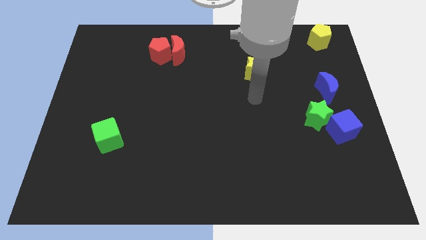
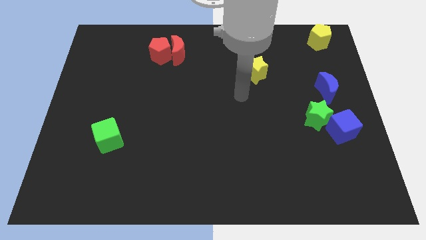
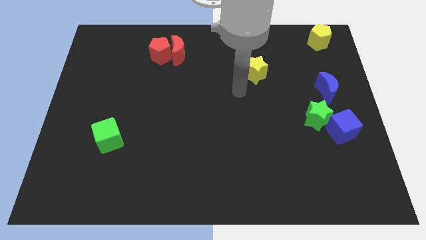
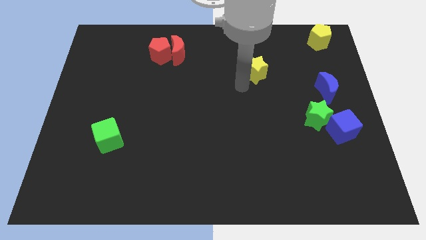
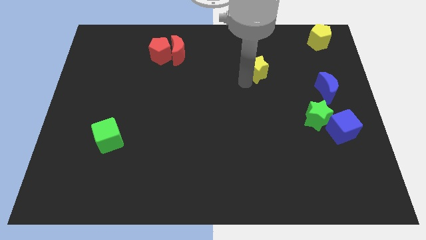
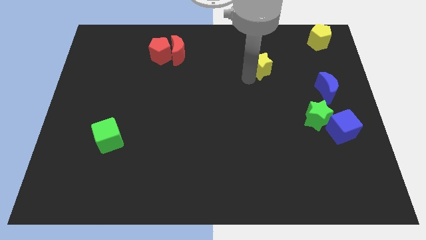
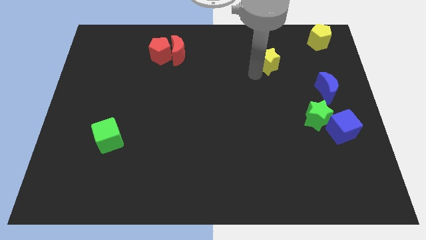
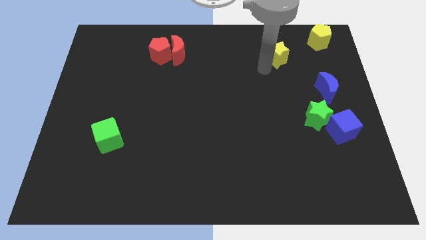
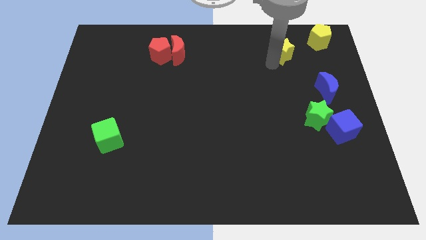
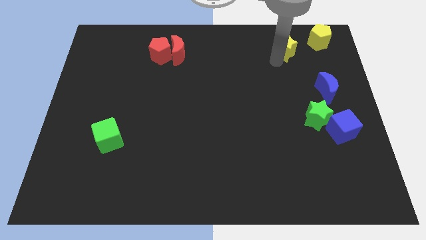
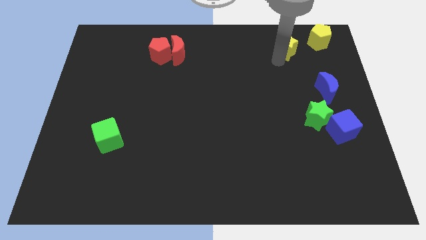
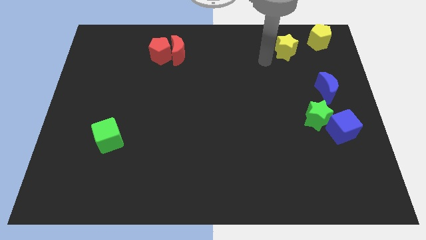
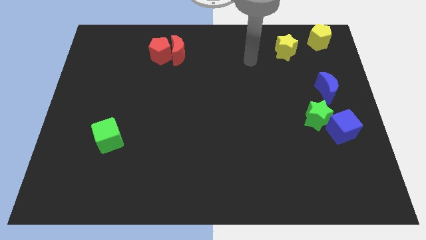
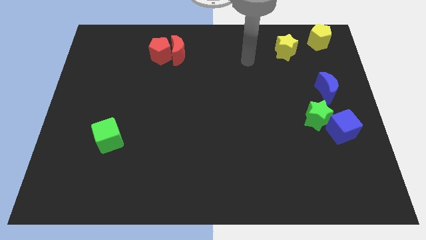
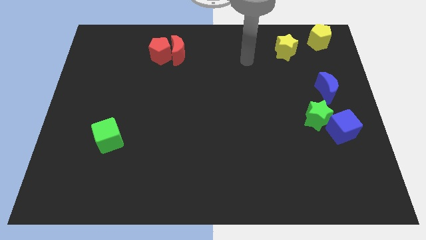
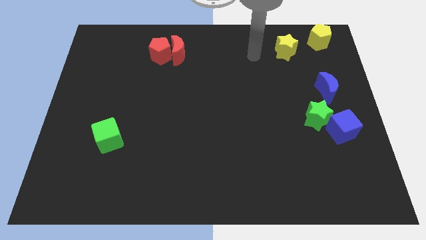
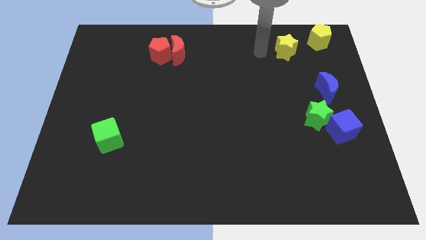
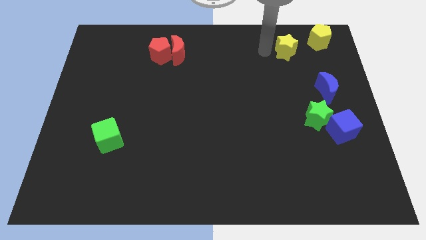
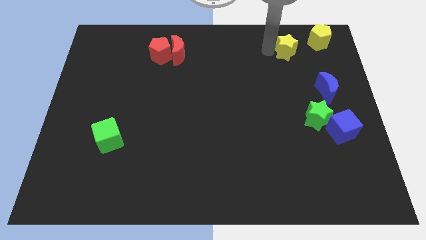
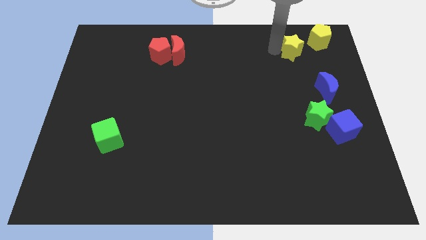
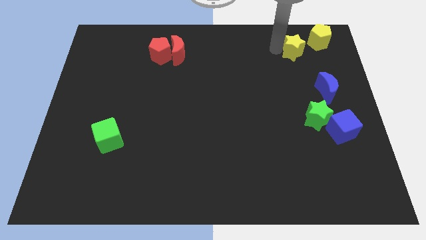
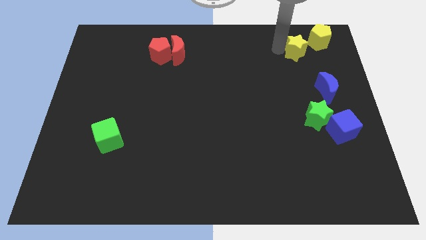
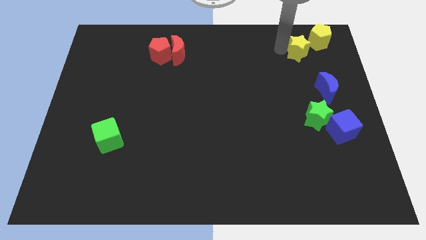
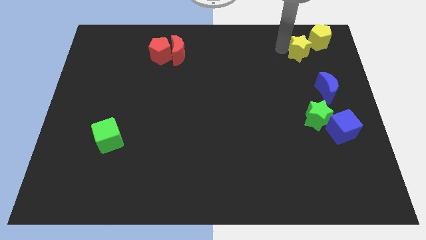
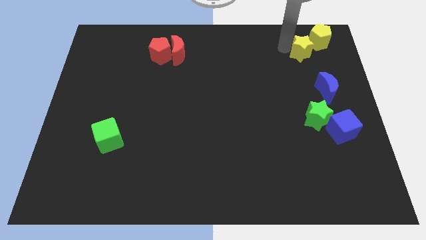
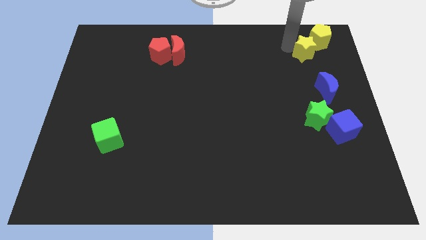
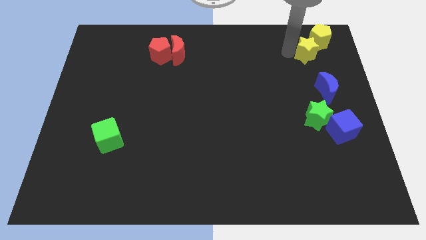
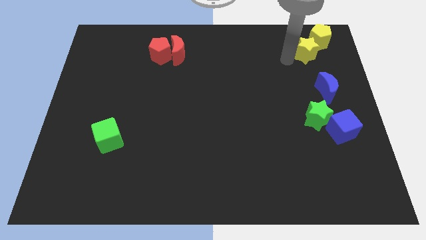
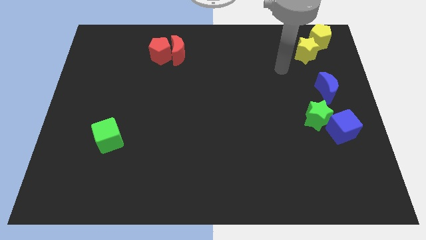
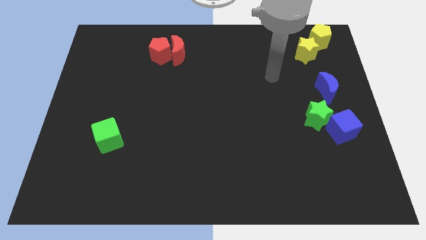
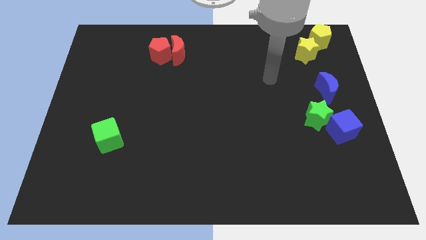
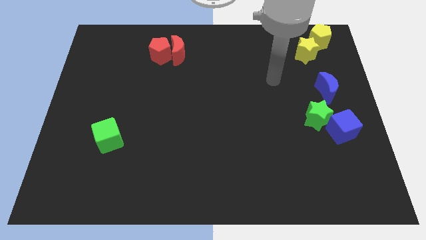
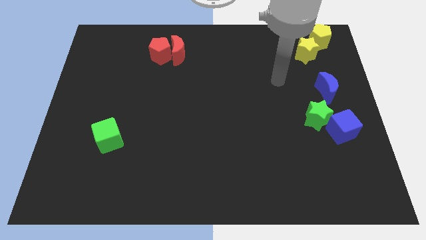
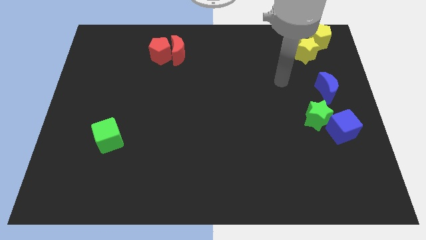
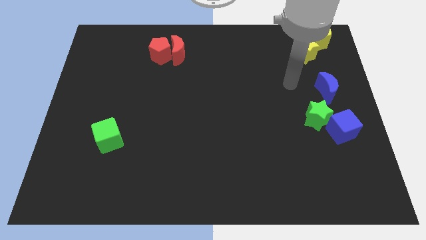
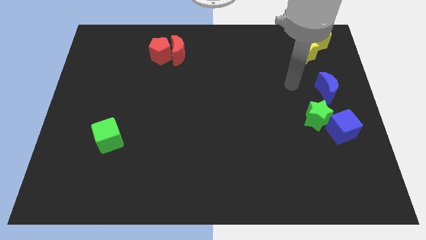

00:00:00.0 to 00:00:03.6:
move the yellow star below the yellow pentagon

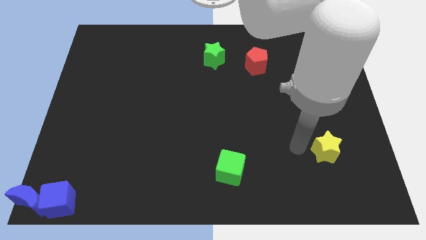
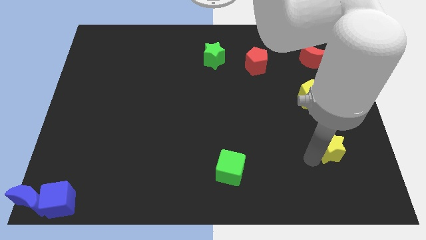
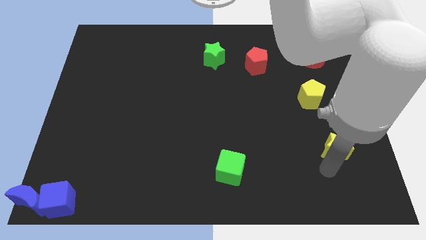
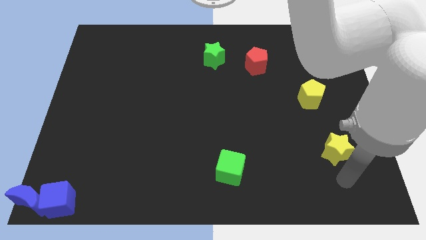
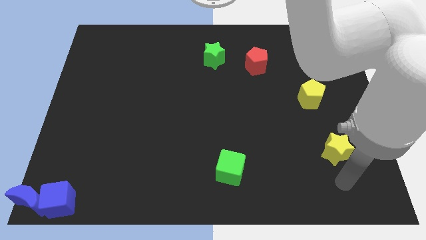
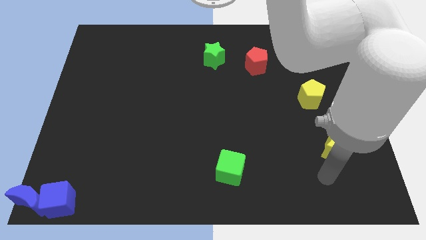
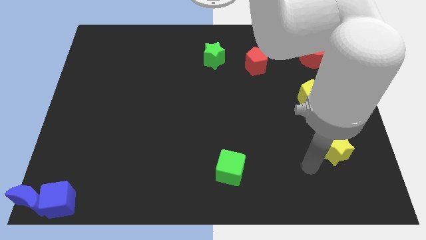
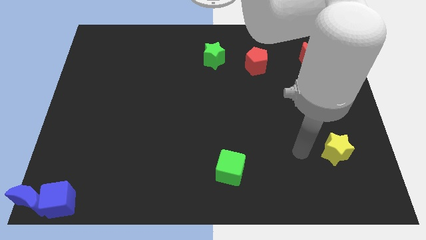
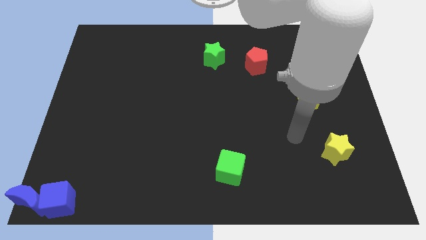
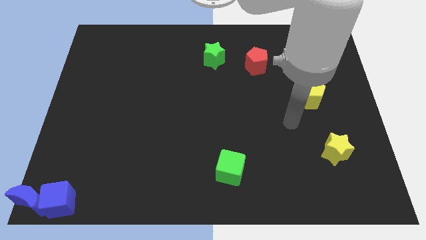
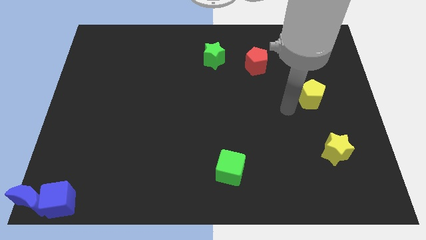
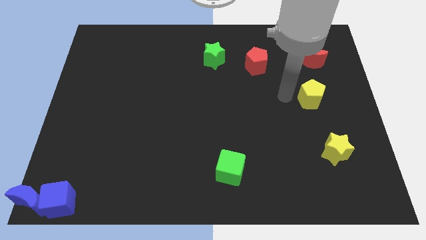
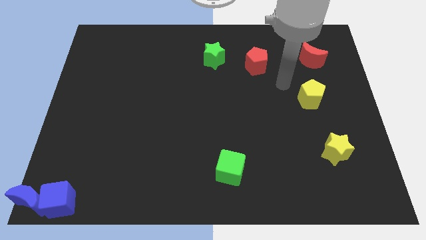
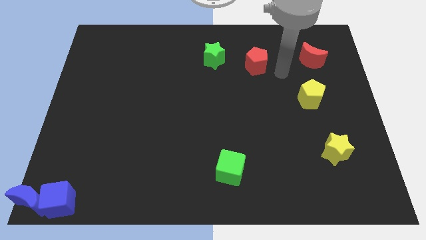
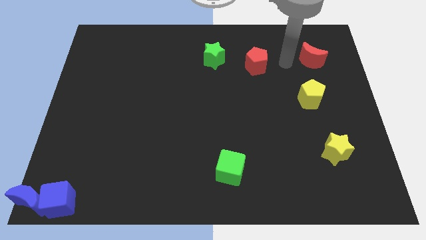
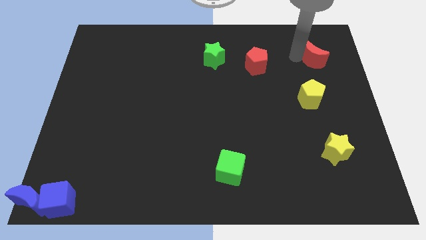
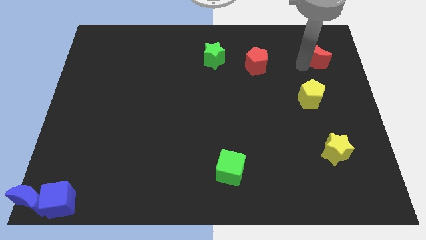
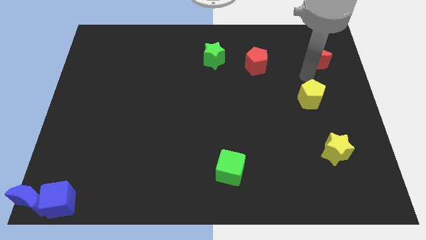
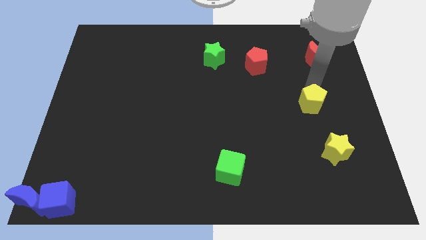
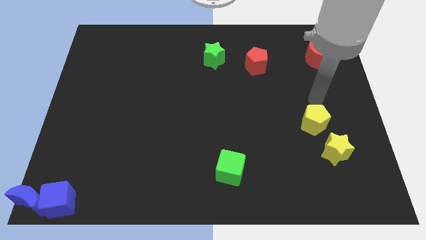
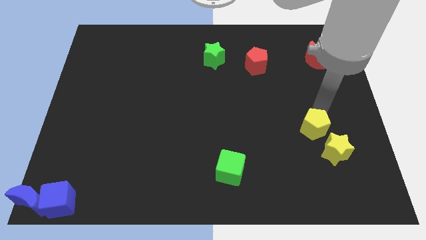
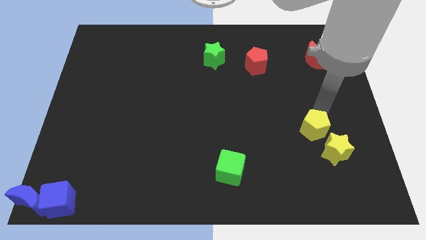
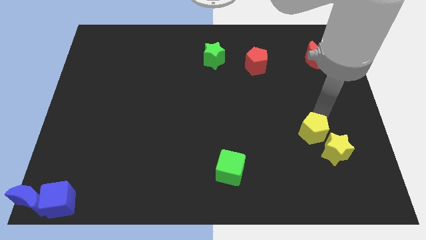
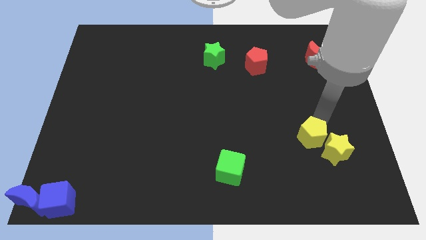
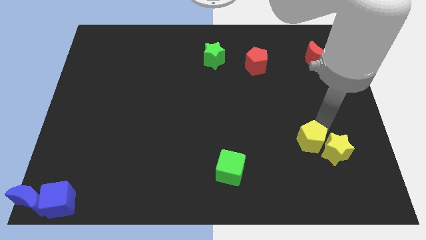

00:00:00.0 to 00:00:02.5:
push the yellow pentagon near the yellow star

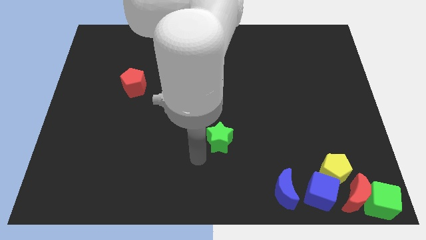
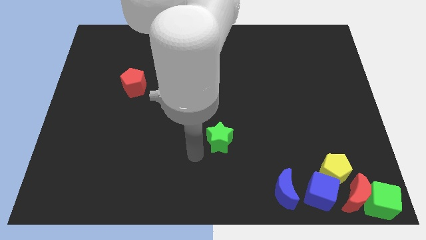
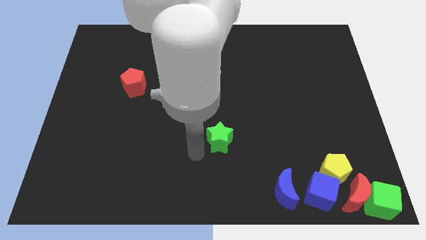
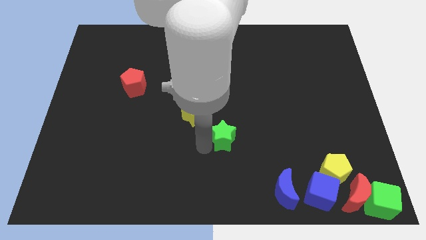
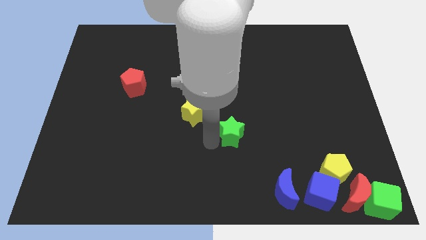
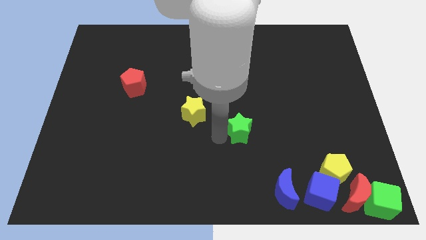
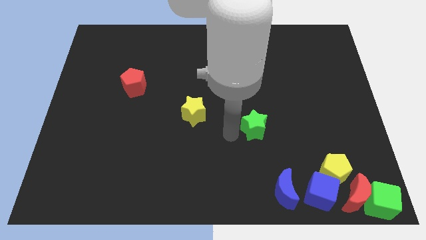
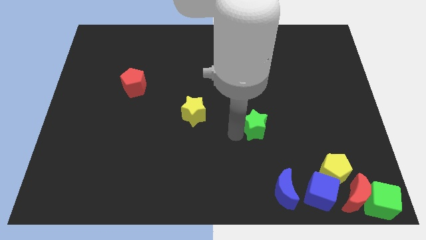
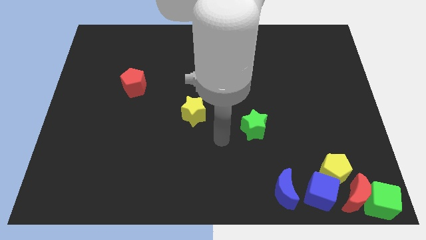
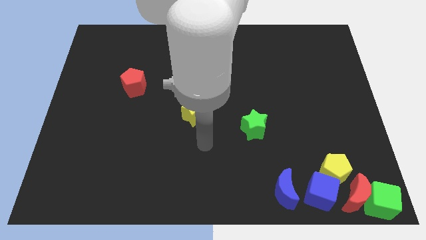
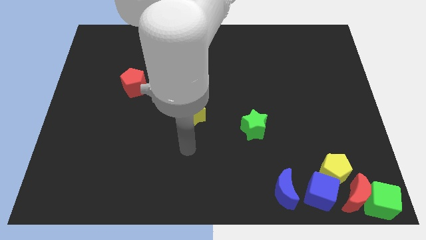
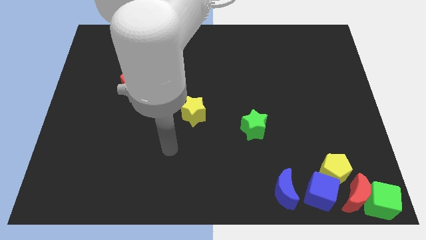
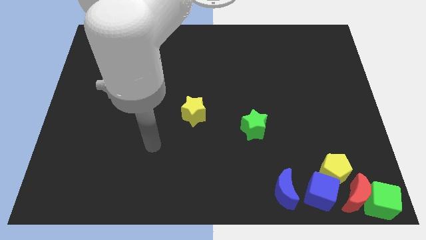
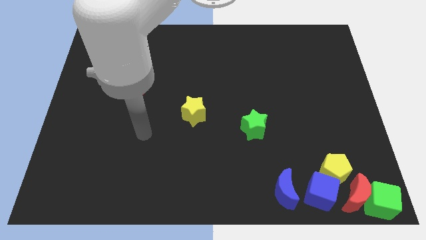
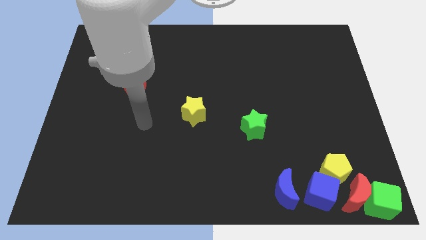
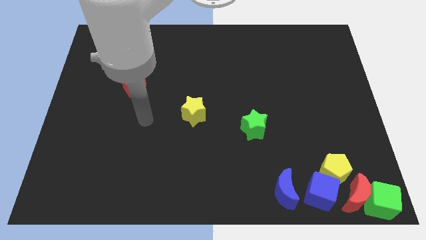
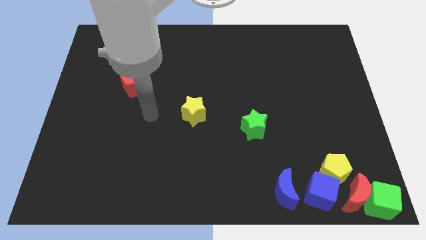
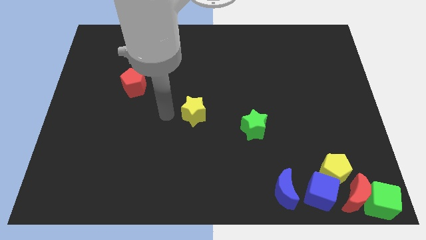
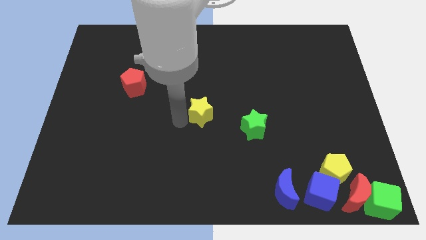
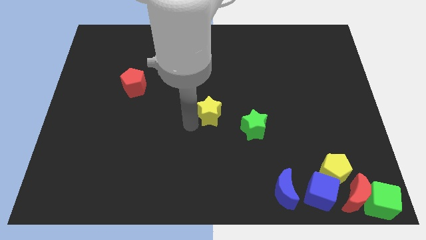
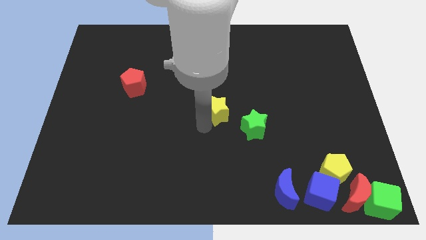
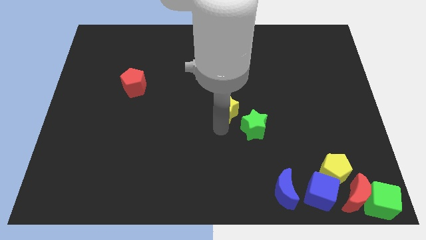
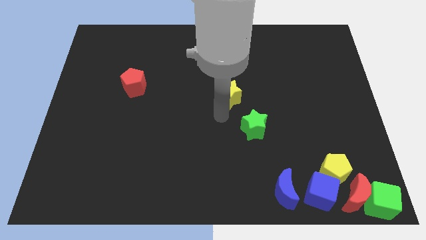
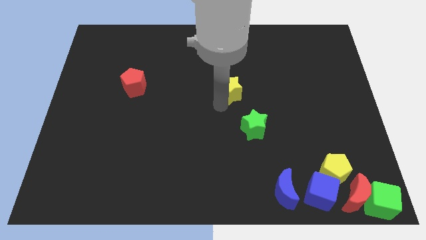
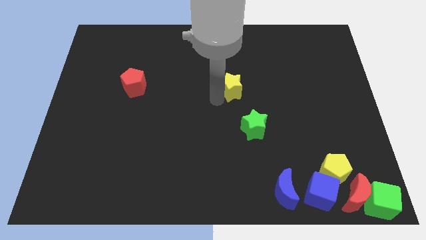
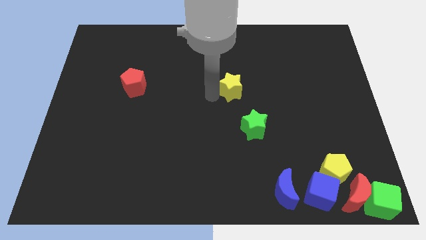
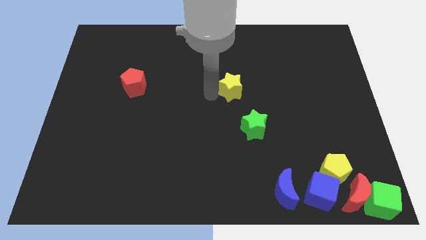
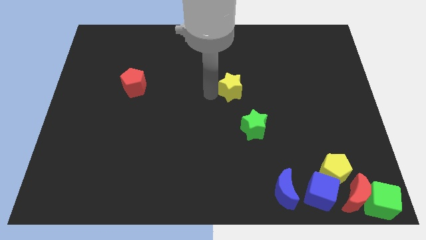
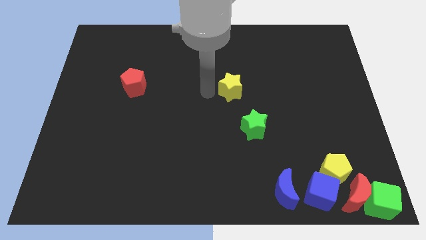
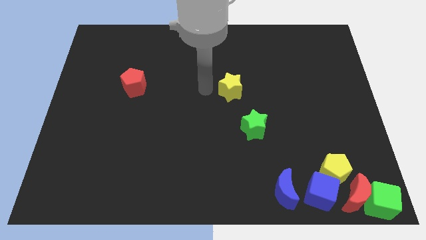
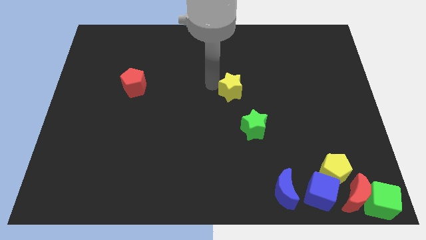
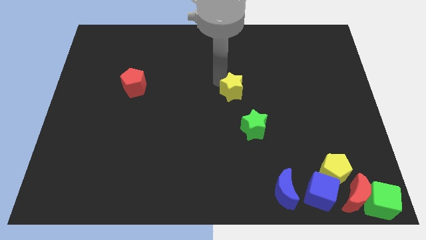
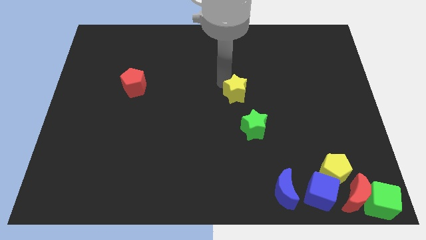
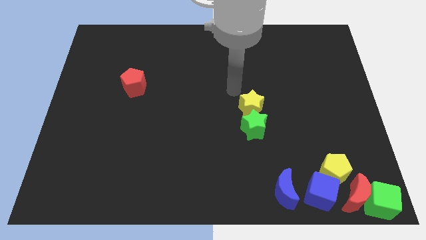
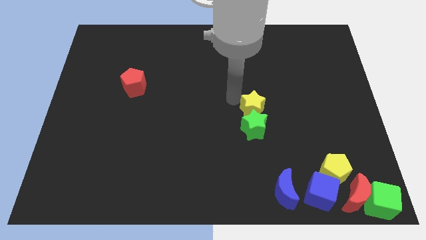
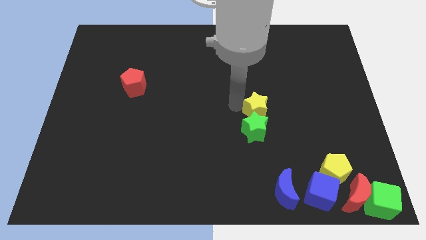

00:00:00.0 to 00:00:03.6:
move the yellow stars to the top of the green star
